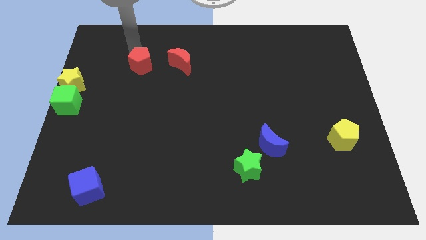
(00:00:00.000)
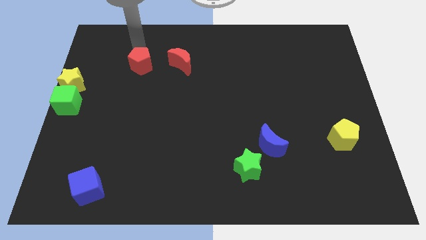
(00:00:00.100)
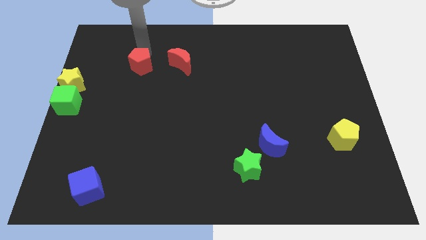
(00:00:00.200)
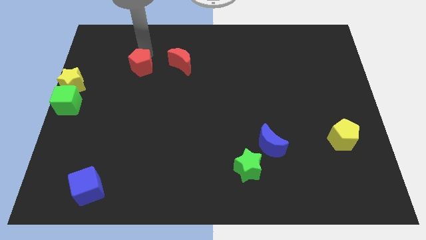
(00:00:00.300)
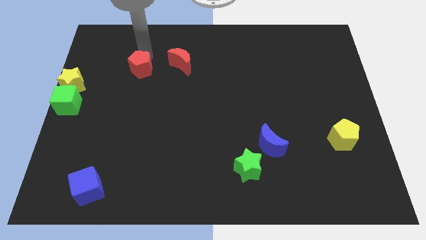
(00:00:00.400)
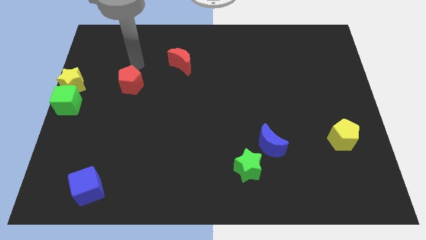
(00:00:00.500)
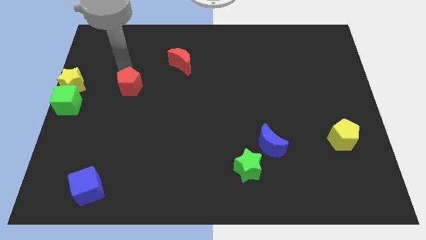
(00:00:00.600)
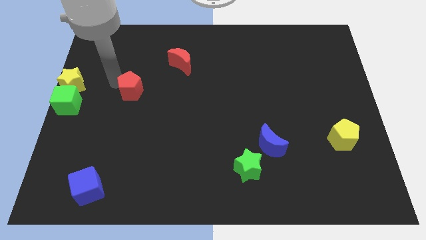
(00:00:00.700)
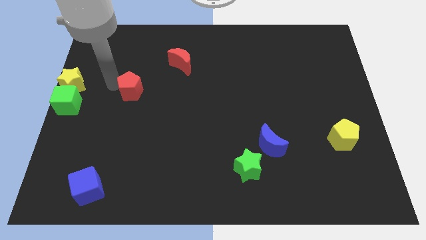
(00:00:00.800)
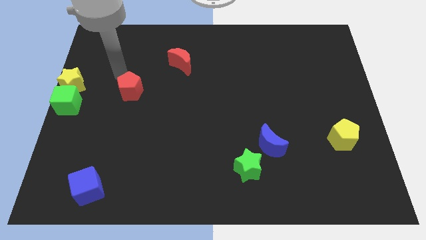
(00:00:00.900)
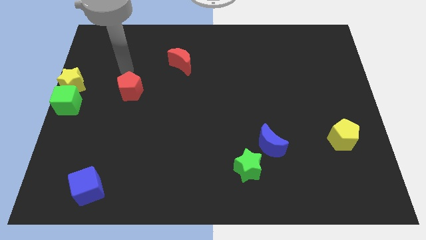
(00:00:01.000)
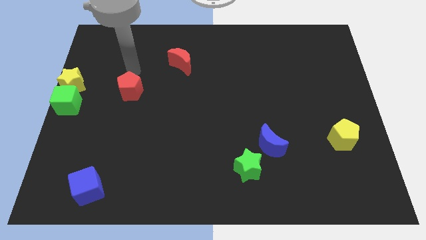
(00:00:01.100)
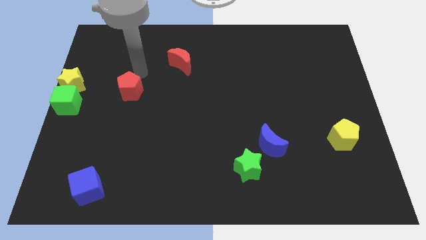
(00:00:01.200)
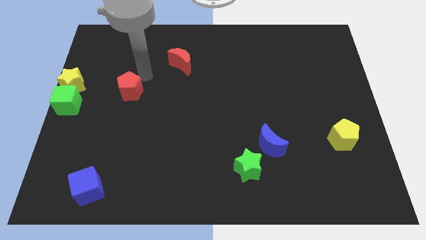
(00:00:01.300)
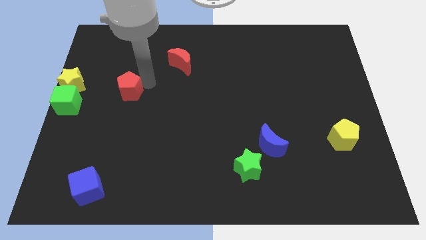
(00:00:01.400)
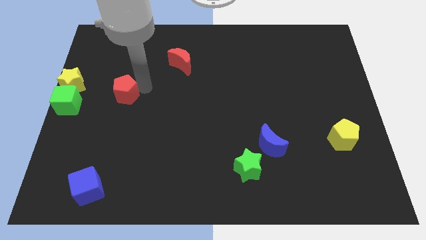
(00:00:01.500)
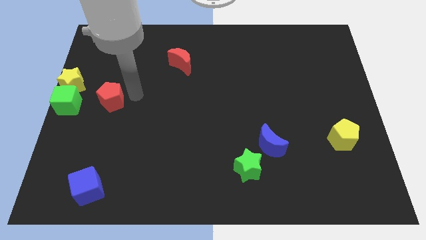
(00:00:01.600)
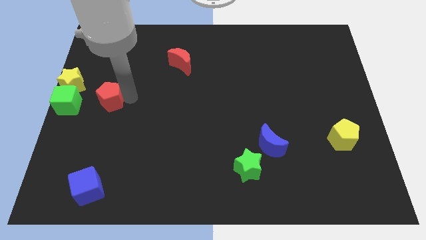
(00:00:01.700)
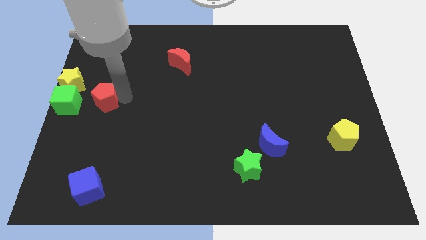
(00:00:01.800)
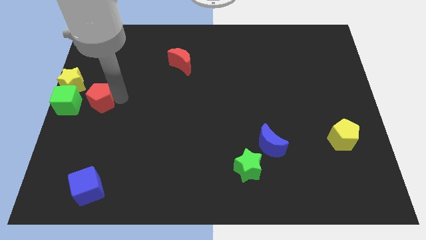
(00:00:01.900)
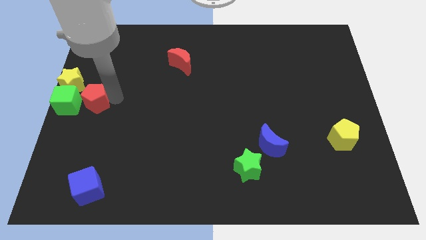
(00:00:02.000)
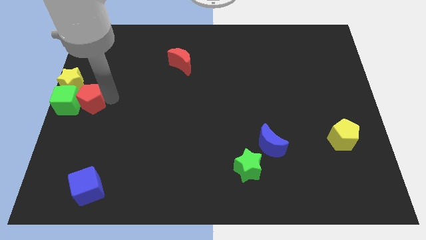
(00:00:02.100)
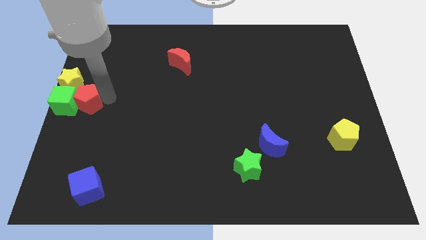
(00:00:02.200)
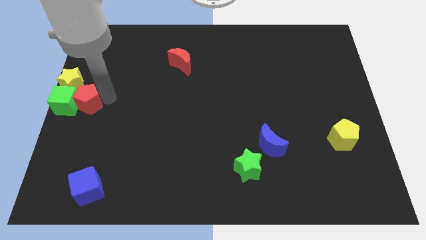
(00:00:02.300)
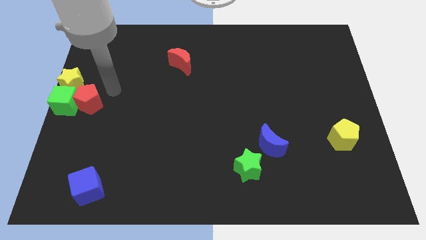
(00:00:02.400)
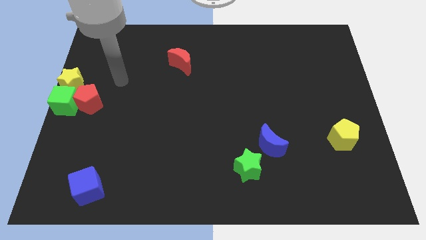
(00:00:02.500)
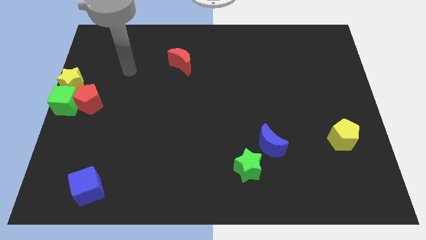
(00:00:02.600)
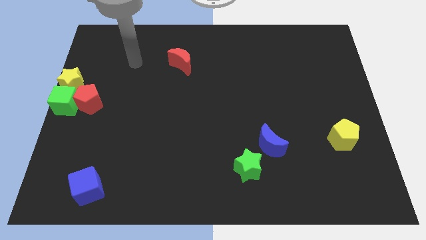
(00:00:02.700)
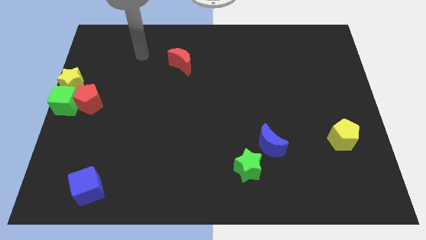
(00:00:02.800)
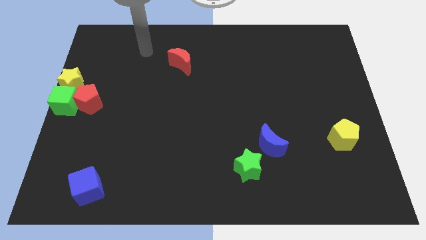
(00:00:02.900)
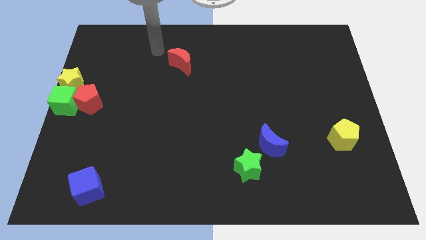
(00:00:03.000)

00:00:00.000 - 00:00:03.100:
push the red pentagon to the right side of green cube

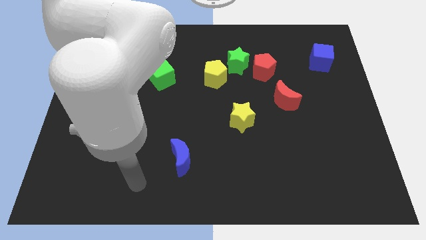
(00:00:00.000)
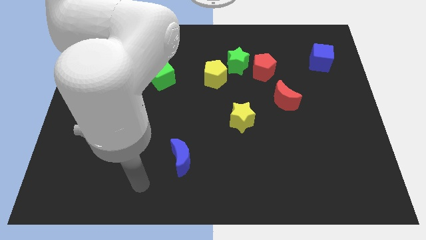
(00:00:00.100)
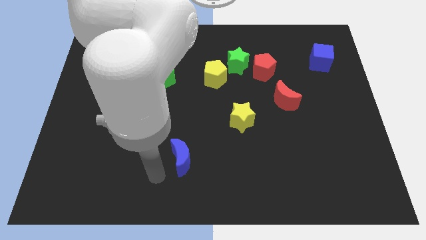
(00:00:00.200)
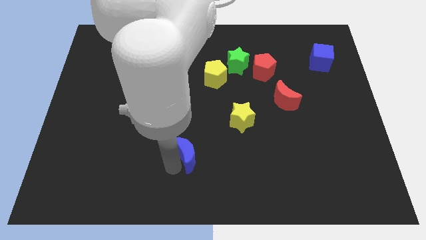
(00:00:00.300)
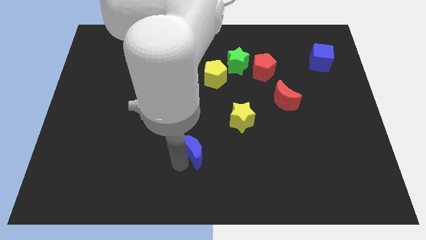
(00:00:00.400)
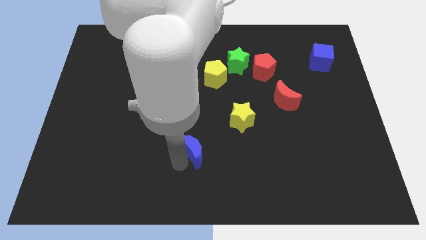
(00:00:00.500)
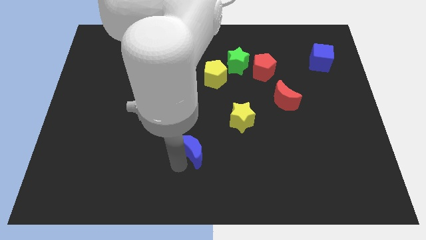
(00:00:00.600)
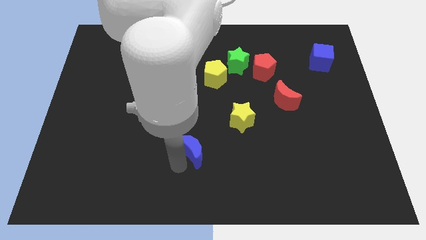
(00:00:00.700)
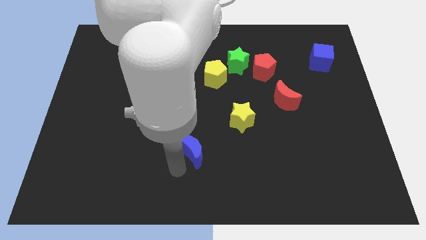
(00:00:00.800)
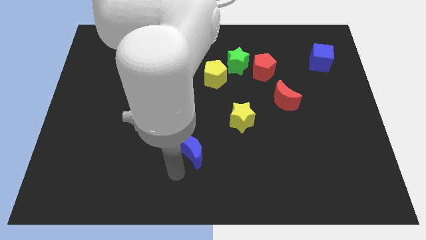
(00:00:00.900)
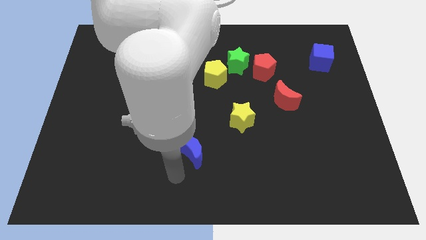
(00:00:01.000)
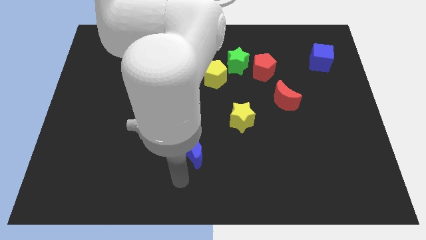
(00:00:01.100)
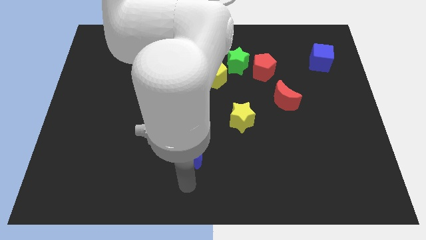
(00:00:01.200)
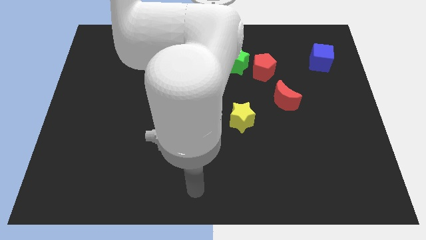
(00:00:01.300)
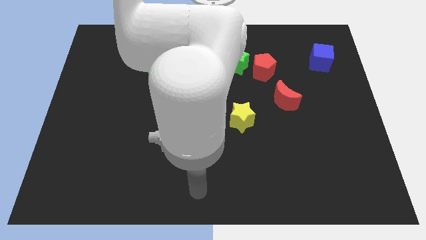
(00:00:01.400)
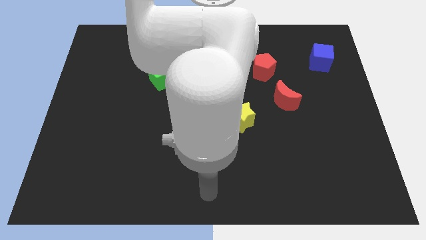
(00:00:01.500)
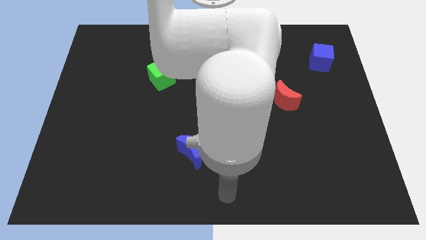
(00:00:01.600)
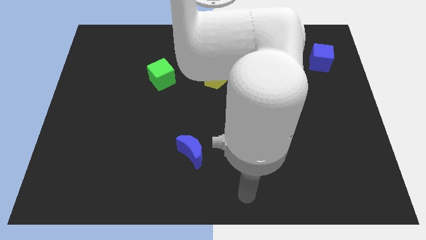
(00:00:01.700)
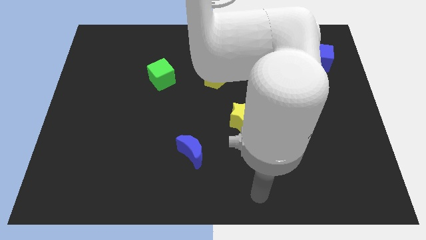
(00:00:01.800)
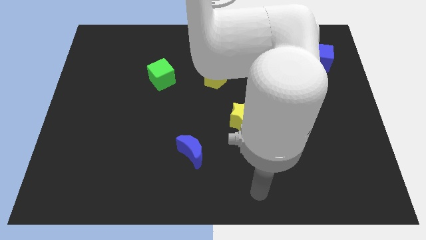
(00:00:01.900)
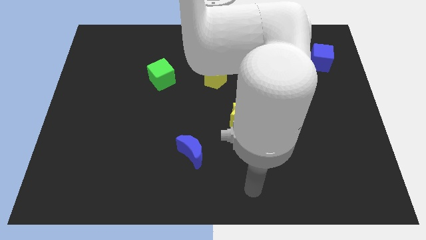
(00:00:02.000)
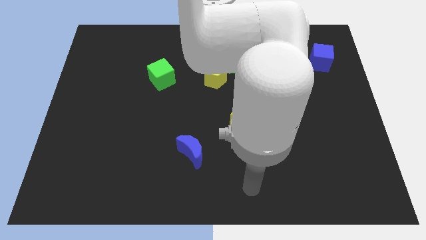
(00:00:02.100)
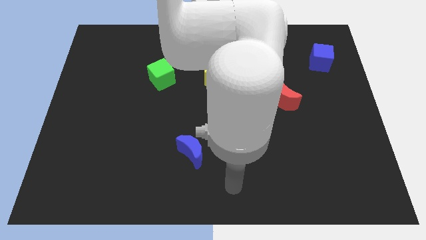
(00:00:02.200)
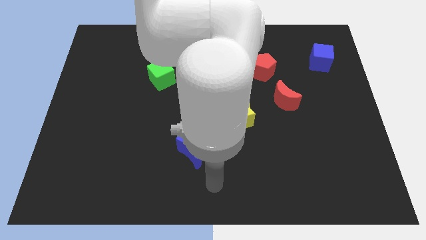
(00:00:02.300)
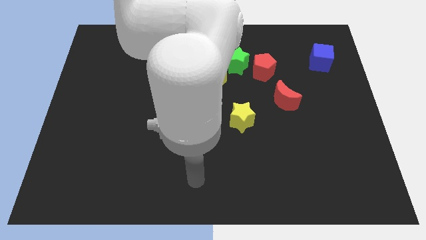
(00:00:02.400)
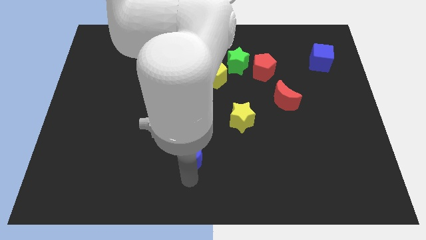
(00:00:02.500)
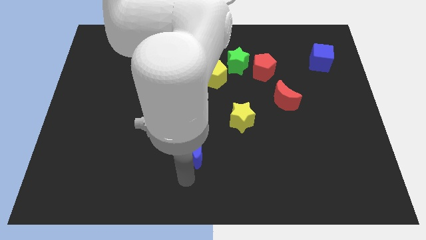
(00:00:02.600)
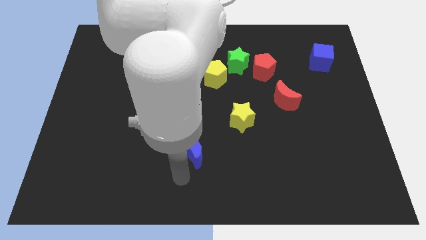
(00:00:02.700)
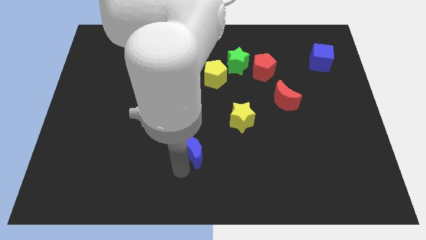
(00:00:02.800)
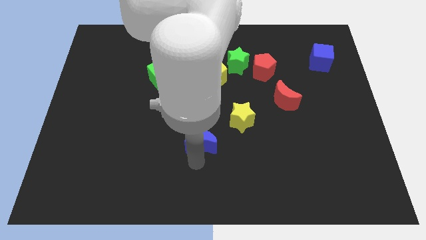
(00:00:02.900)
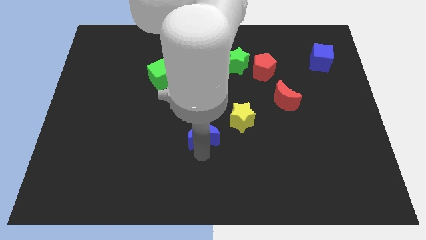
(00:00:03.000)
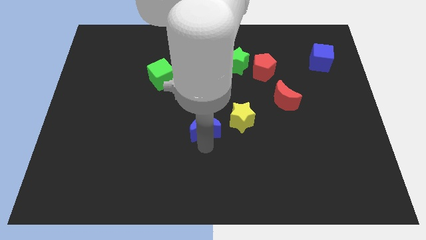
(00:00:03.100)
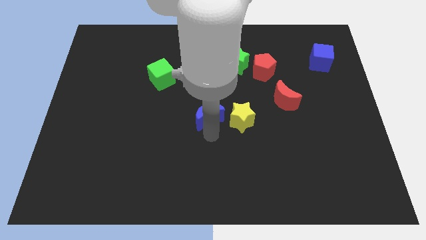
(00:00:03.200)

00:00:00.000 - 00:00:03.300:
push the blue crescent to the left of the yellow star

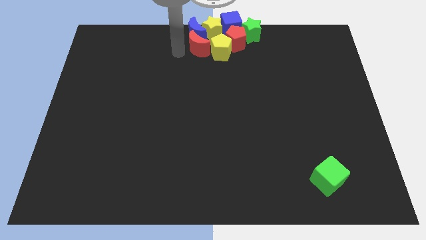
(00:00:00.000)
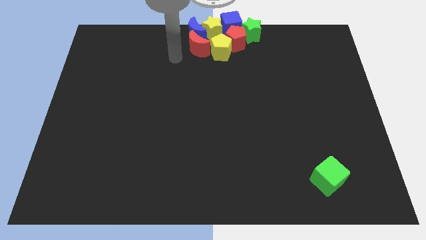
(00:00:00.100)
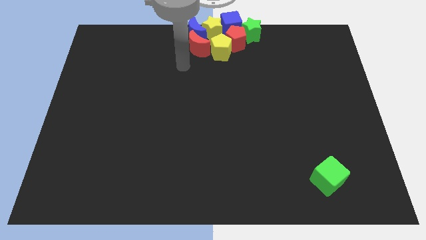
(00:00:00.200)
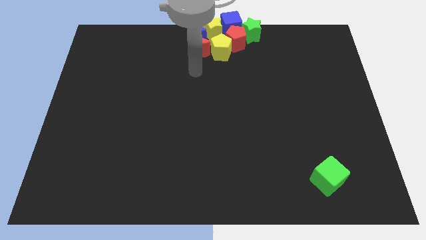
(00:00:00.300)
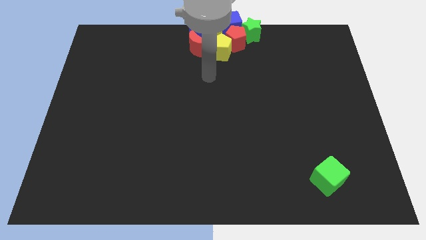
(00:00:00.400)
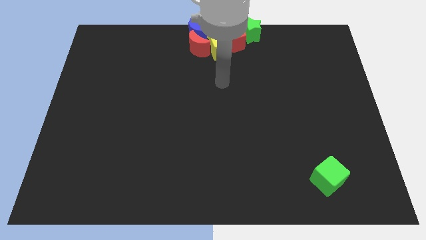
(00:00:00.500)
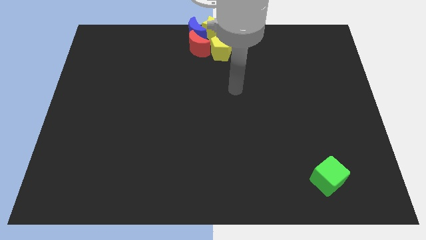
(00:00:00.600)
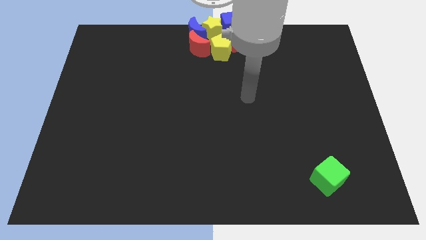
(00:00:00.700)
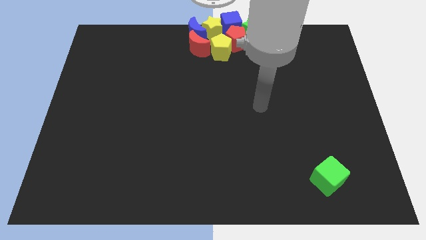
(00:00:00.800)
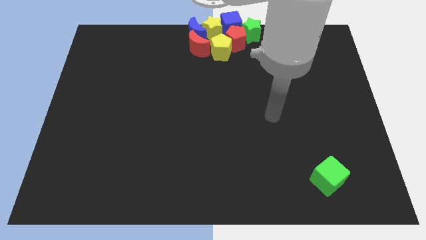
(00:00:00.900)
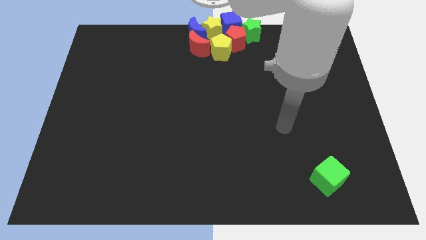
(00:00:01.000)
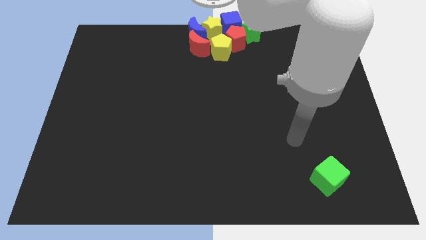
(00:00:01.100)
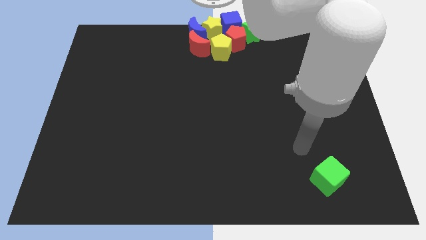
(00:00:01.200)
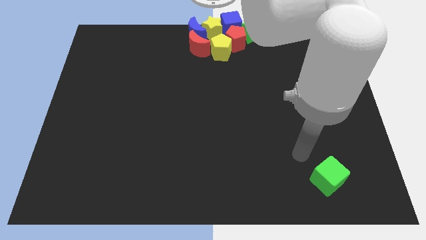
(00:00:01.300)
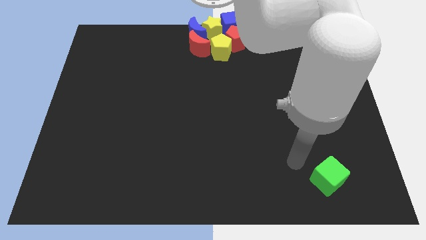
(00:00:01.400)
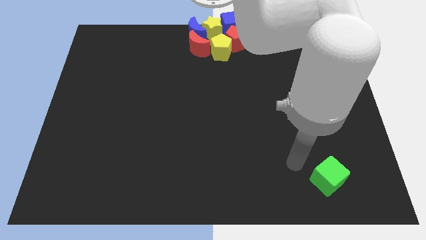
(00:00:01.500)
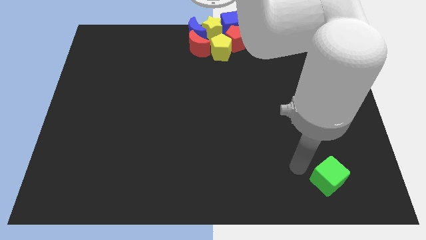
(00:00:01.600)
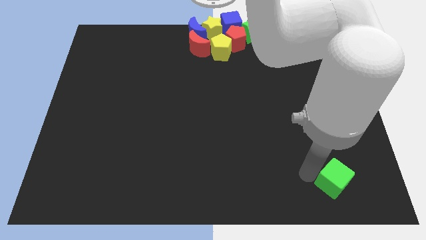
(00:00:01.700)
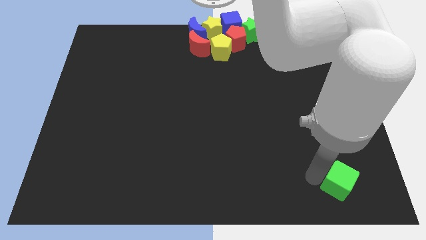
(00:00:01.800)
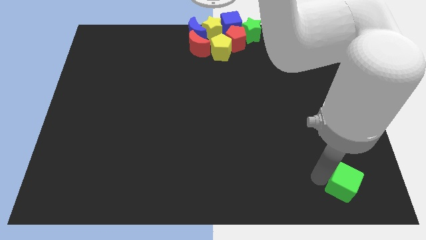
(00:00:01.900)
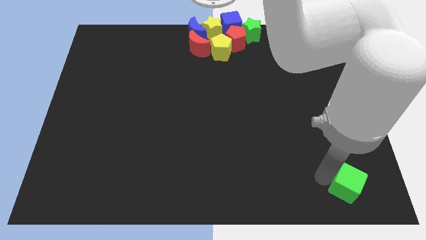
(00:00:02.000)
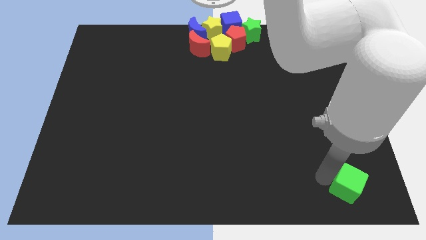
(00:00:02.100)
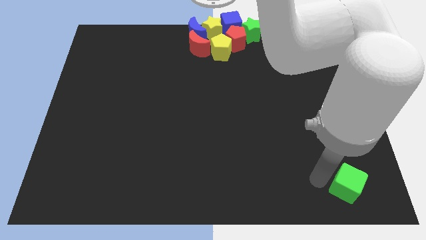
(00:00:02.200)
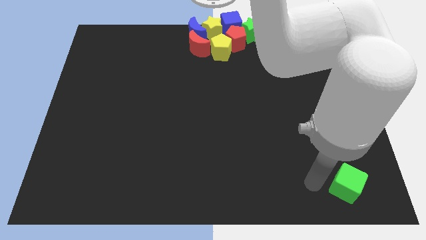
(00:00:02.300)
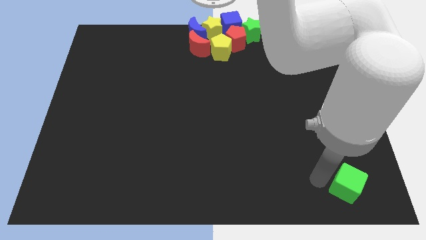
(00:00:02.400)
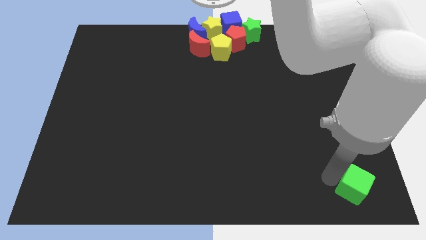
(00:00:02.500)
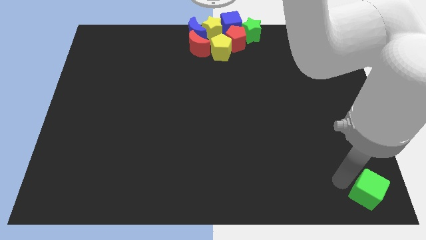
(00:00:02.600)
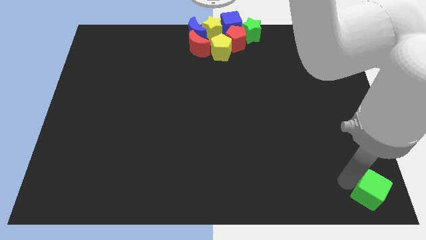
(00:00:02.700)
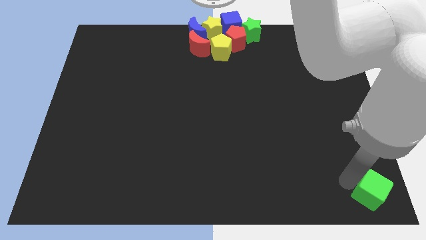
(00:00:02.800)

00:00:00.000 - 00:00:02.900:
move the green cube to the bottom right of the board
